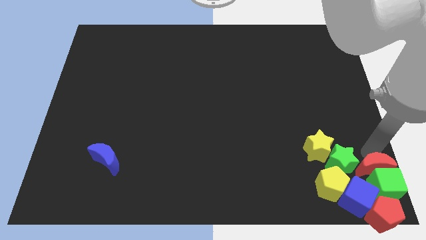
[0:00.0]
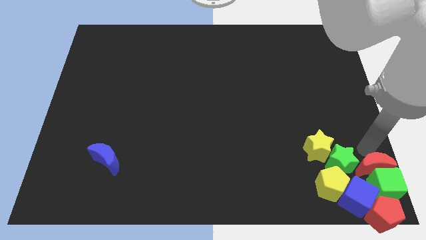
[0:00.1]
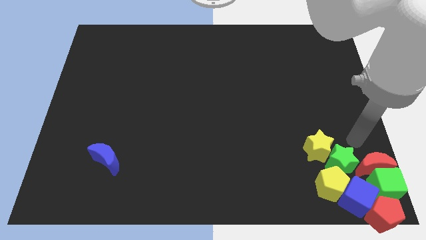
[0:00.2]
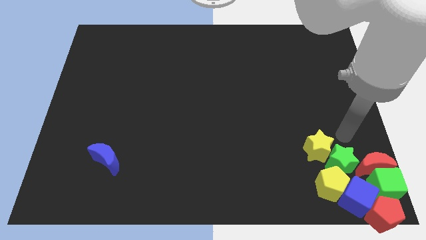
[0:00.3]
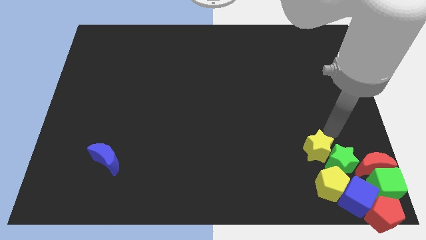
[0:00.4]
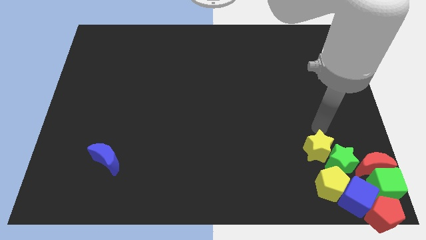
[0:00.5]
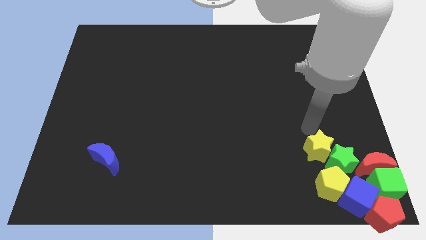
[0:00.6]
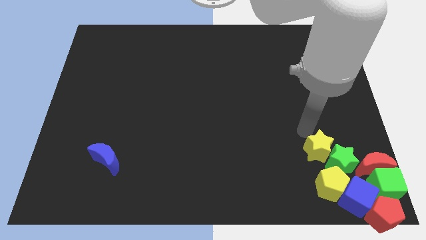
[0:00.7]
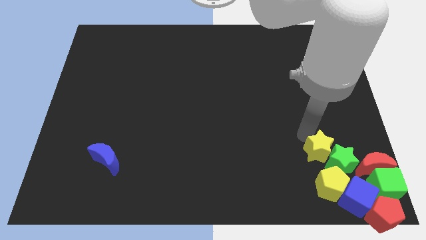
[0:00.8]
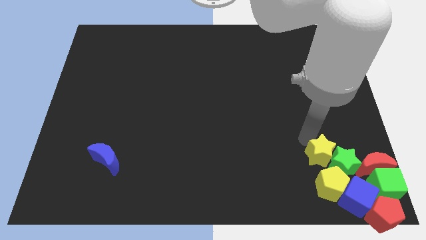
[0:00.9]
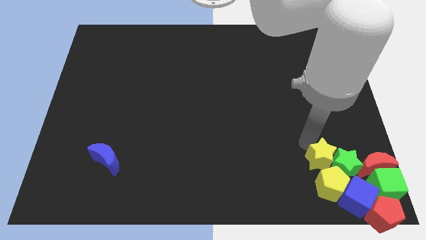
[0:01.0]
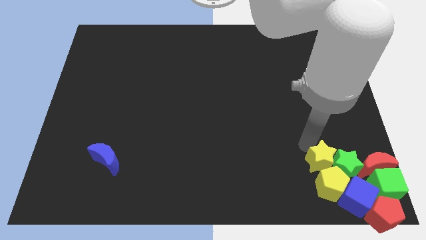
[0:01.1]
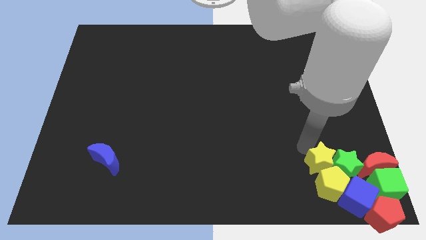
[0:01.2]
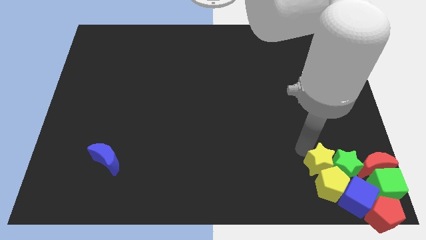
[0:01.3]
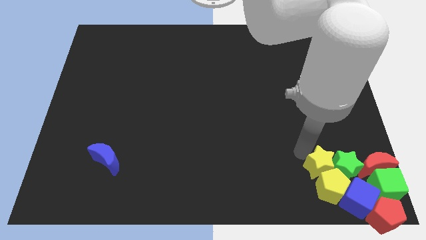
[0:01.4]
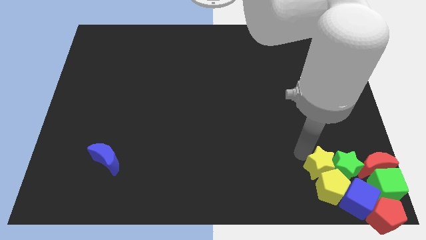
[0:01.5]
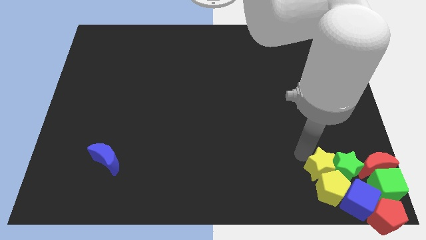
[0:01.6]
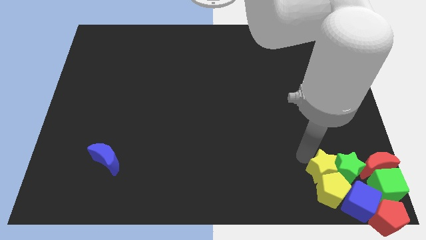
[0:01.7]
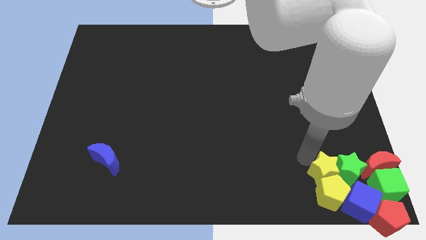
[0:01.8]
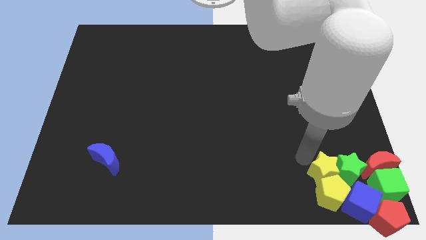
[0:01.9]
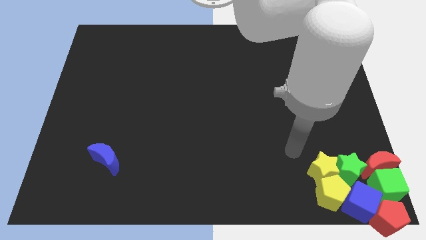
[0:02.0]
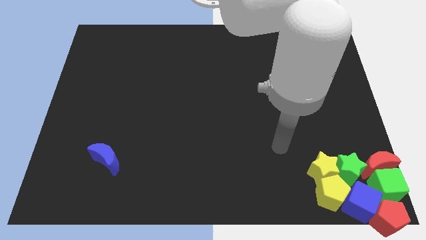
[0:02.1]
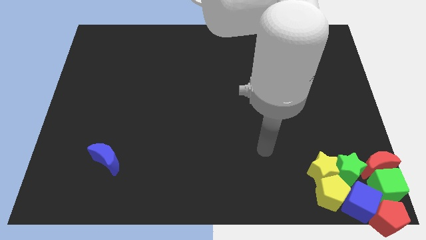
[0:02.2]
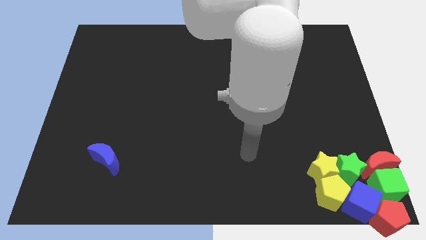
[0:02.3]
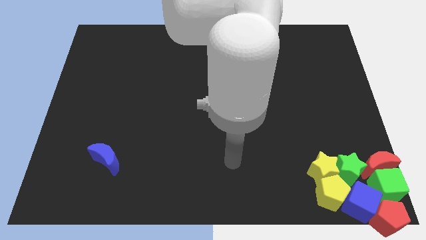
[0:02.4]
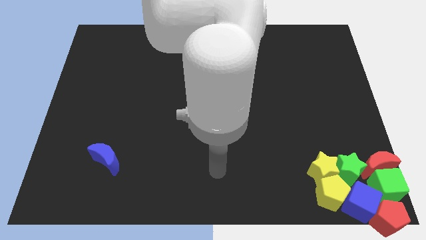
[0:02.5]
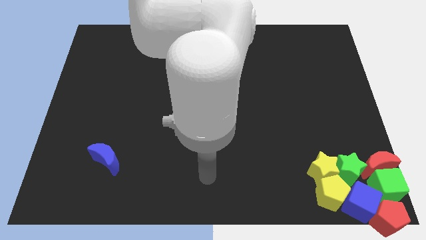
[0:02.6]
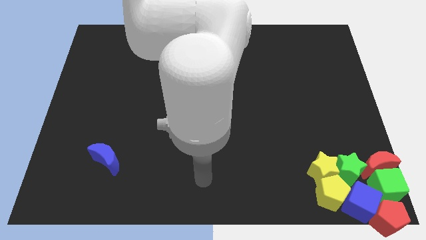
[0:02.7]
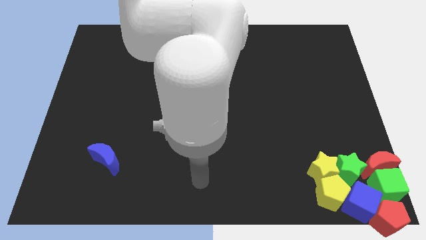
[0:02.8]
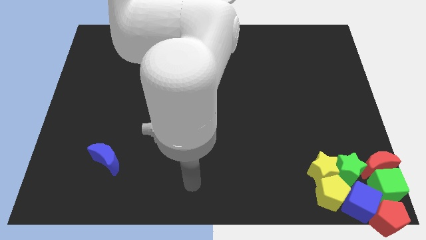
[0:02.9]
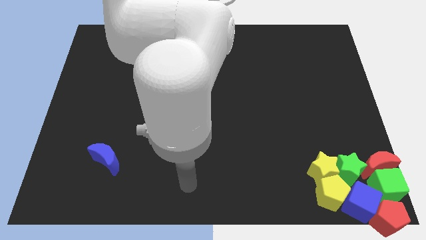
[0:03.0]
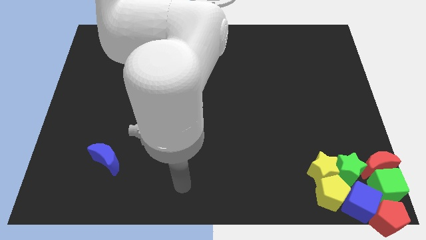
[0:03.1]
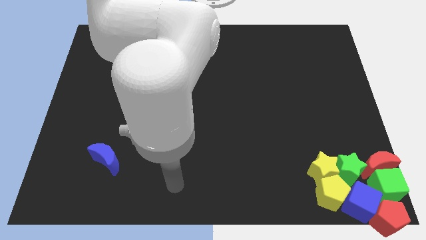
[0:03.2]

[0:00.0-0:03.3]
push yellow star into yellow pentagon

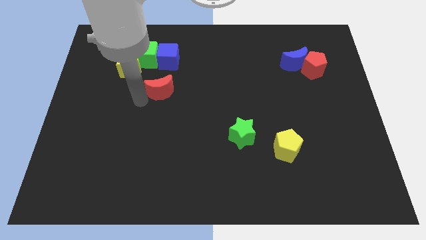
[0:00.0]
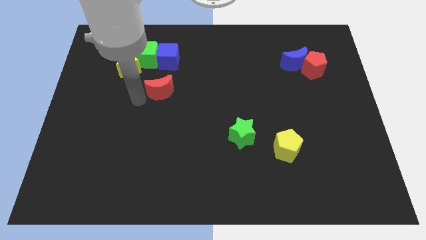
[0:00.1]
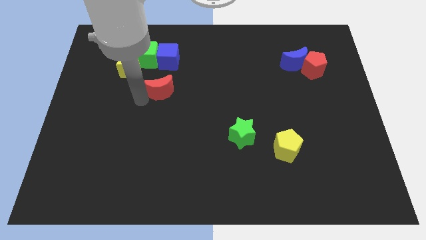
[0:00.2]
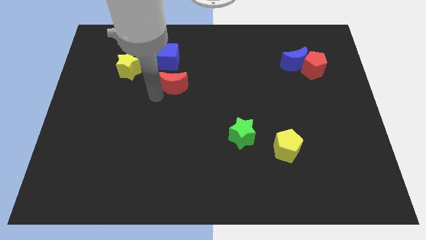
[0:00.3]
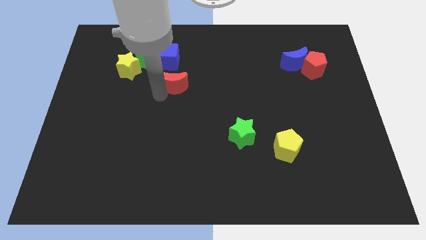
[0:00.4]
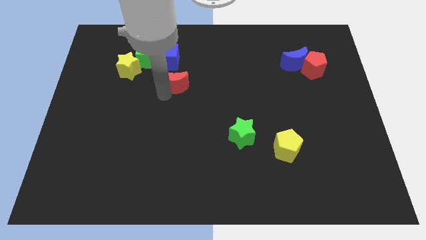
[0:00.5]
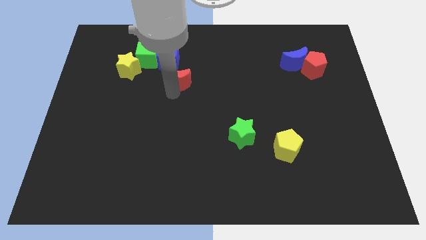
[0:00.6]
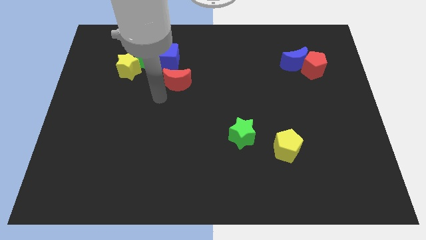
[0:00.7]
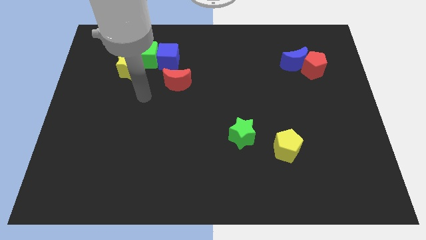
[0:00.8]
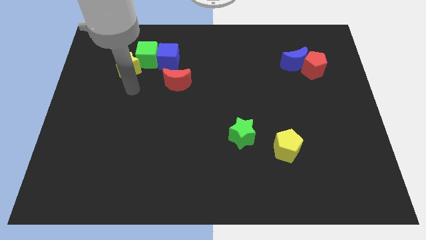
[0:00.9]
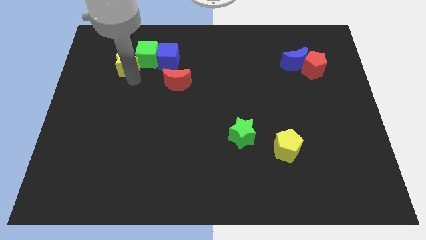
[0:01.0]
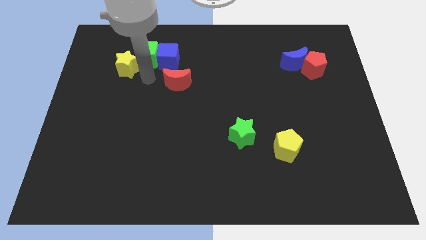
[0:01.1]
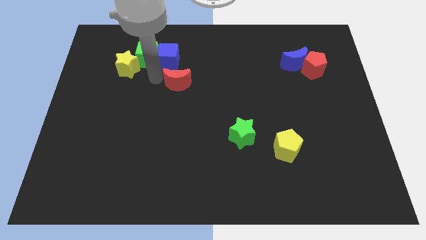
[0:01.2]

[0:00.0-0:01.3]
move red moon right below the blue cube

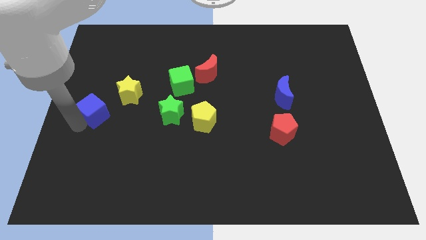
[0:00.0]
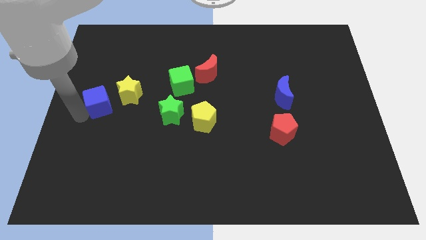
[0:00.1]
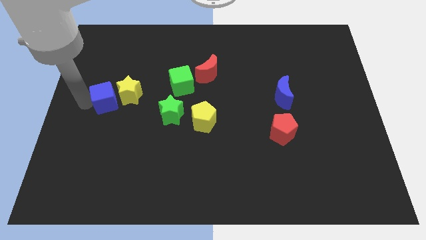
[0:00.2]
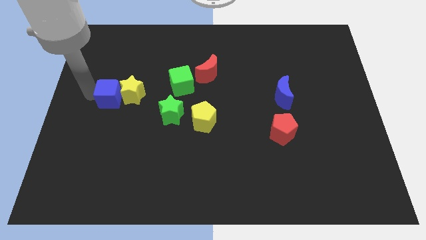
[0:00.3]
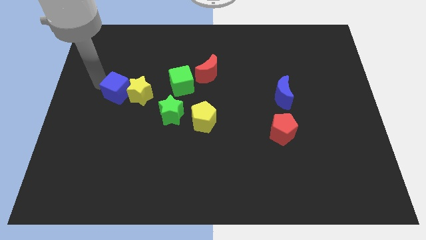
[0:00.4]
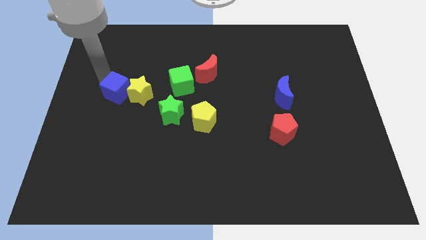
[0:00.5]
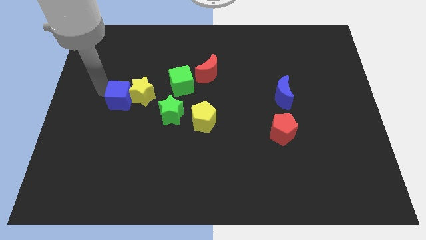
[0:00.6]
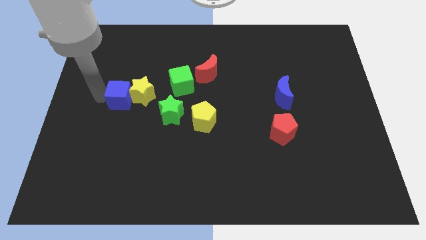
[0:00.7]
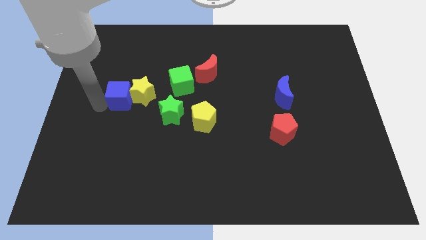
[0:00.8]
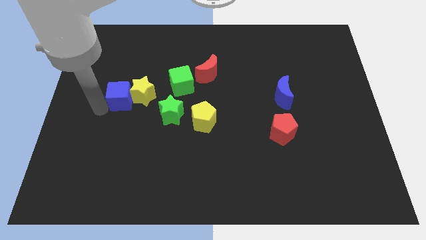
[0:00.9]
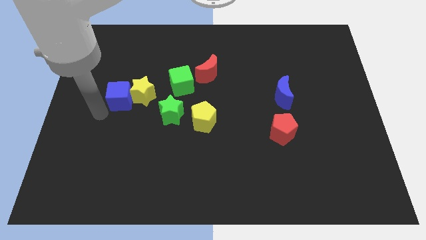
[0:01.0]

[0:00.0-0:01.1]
move the blue cube into the left side of the yellow star

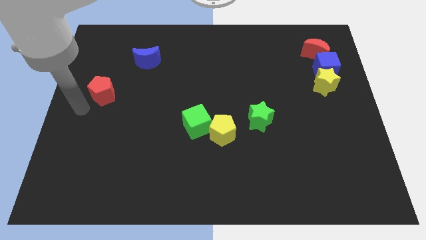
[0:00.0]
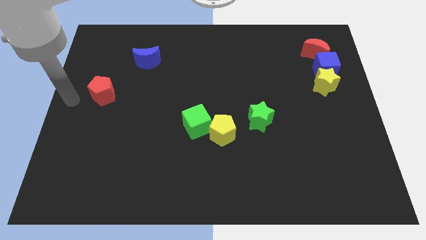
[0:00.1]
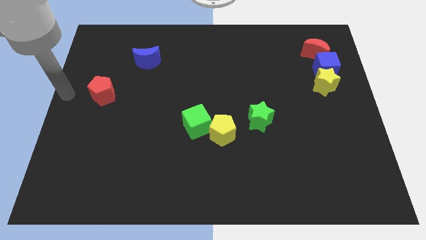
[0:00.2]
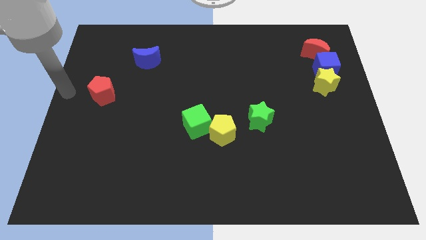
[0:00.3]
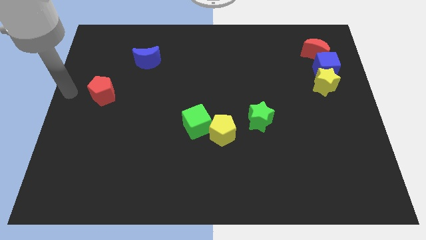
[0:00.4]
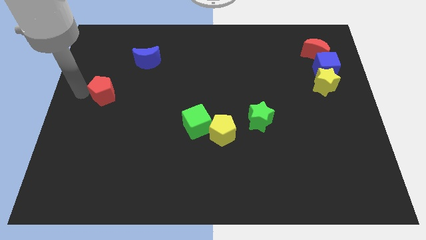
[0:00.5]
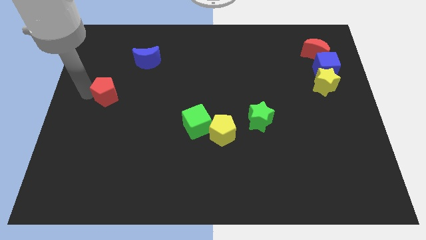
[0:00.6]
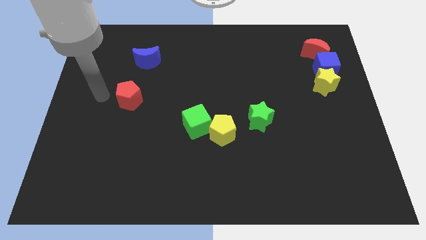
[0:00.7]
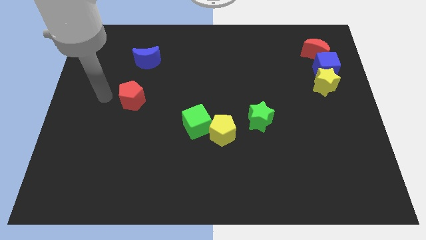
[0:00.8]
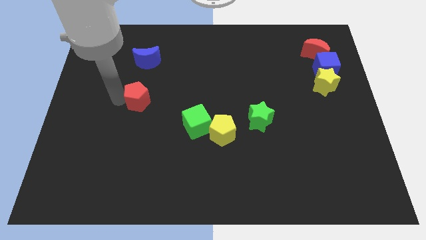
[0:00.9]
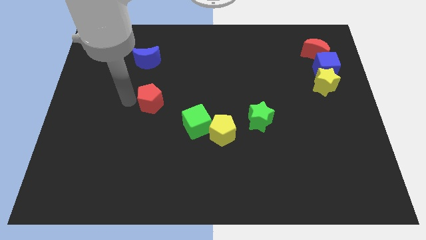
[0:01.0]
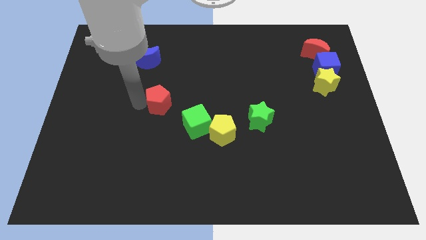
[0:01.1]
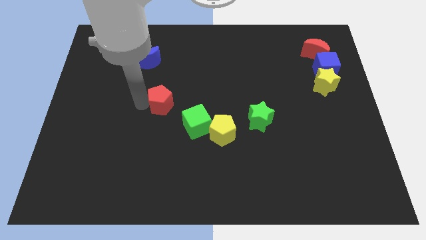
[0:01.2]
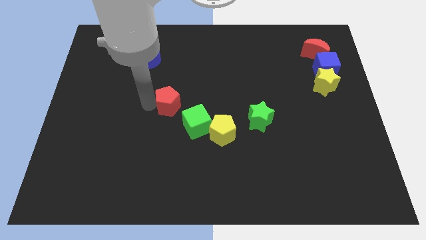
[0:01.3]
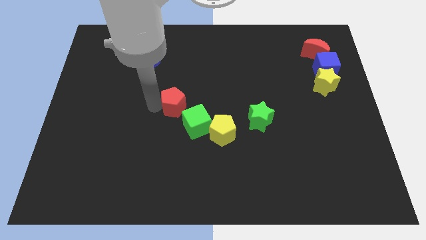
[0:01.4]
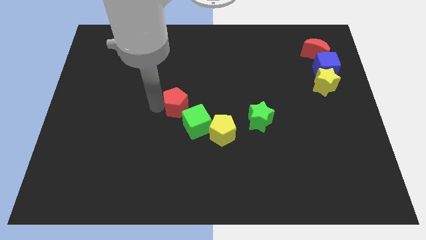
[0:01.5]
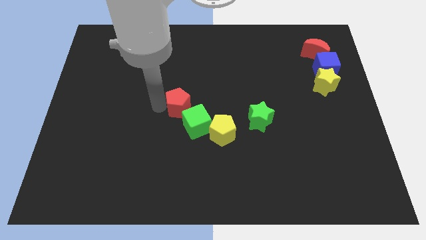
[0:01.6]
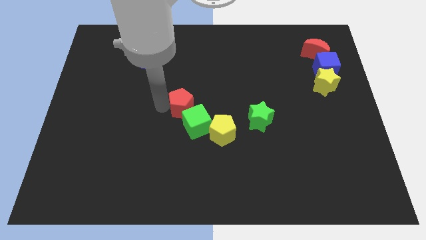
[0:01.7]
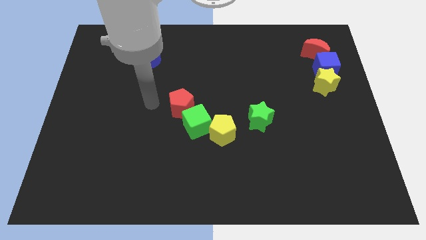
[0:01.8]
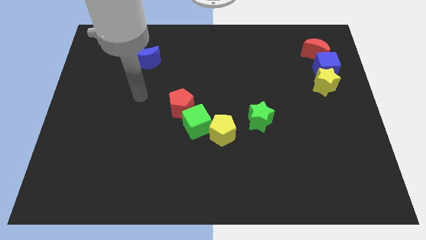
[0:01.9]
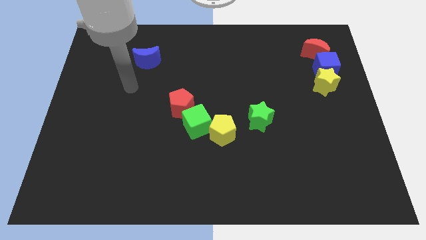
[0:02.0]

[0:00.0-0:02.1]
slide red pentagon into green cube

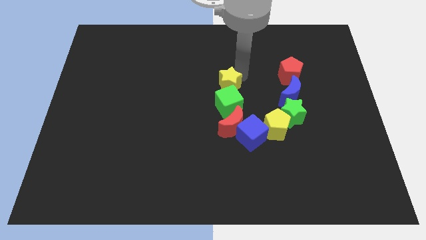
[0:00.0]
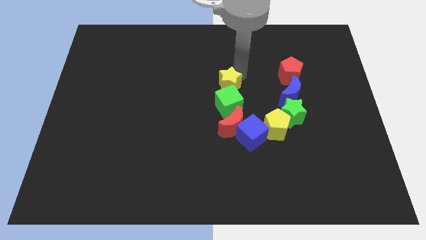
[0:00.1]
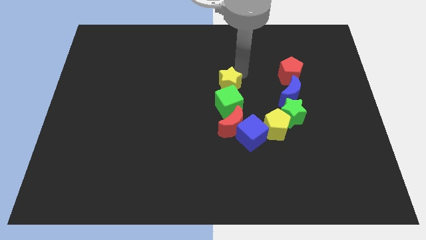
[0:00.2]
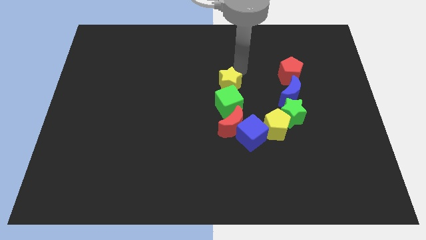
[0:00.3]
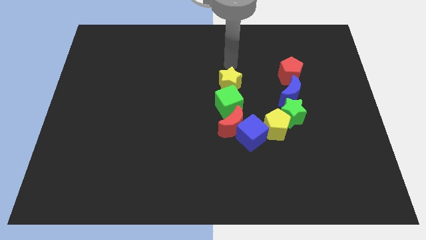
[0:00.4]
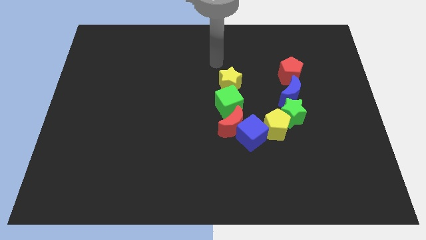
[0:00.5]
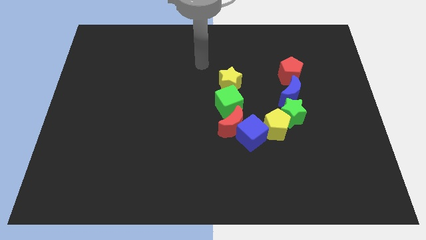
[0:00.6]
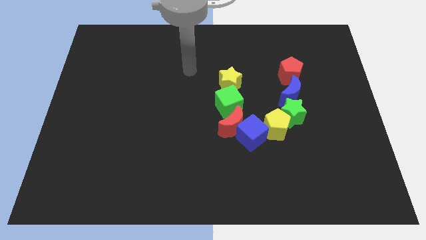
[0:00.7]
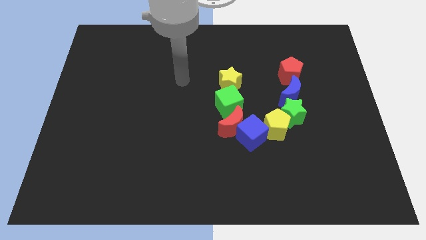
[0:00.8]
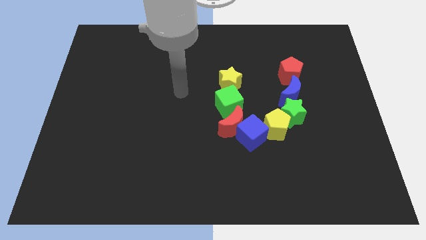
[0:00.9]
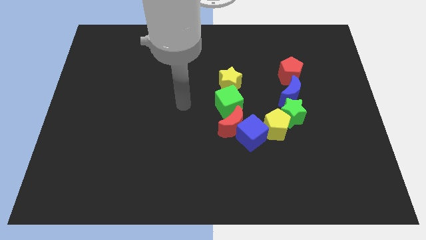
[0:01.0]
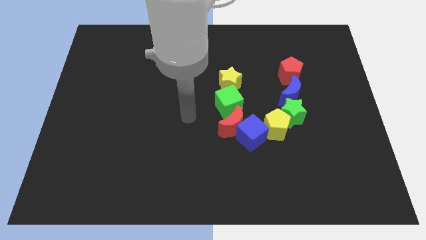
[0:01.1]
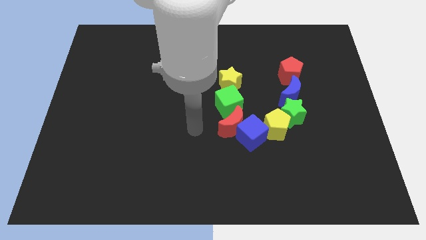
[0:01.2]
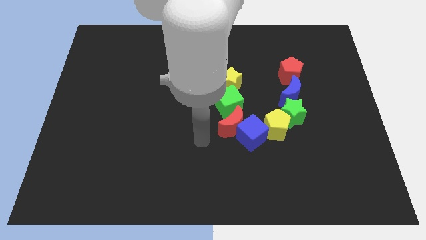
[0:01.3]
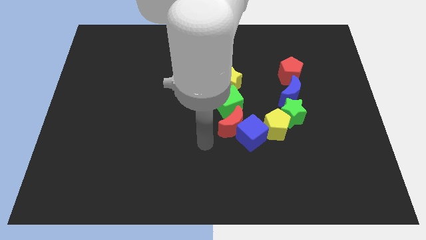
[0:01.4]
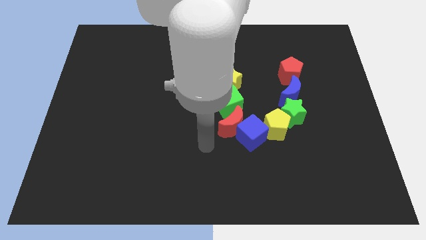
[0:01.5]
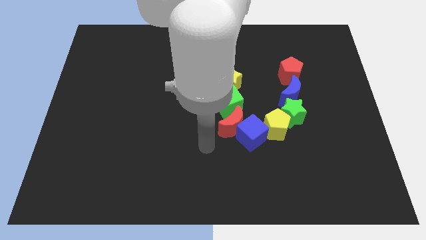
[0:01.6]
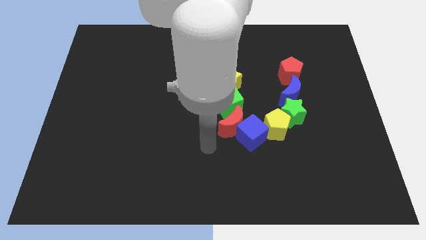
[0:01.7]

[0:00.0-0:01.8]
place your arm towards bottom
